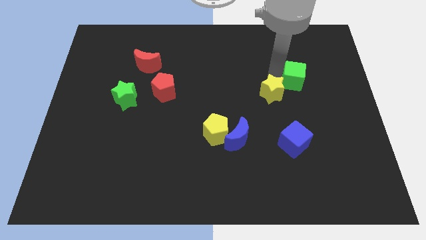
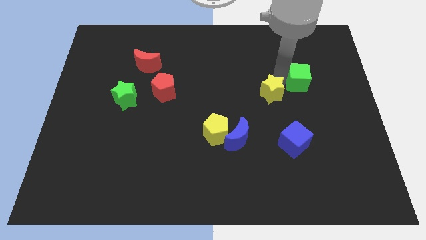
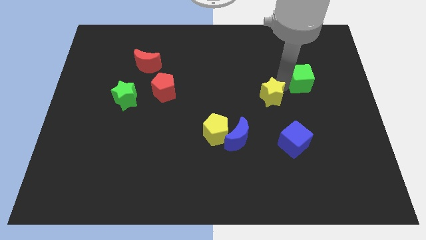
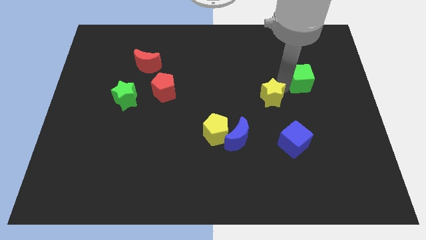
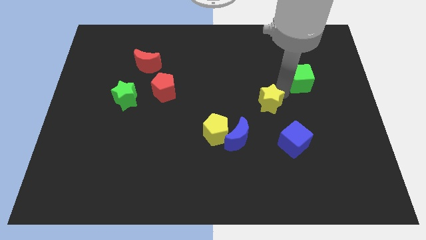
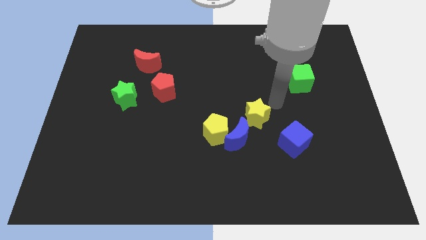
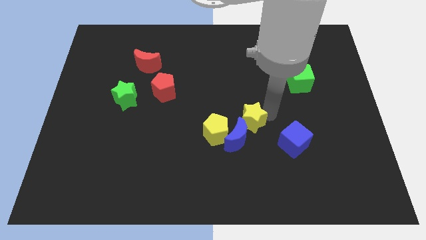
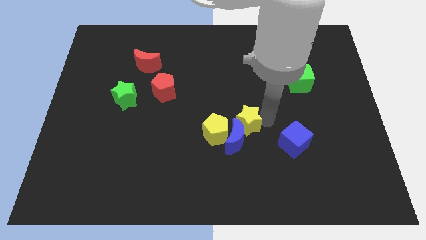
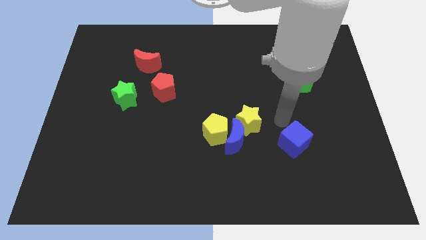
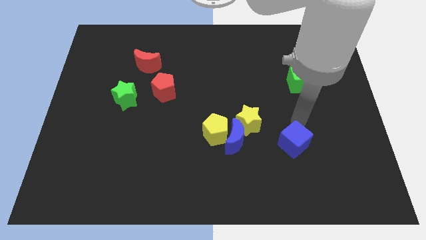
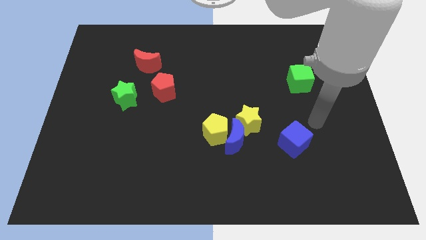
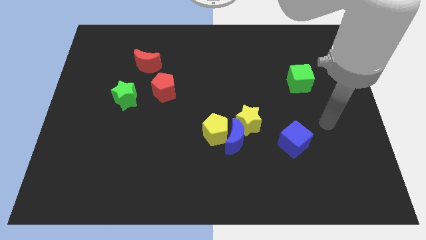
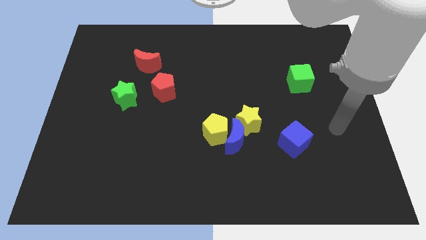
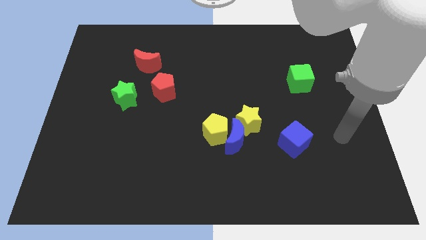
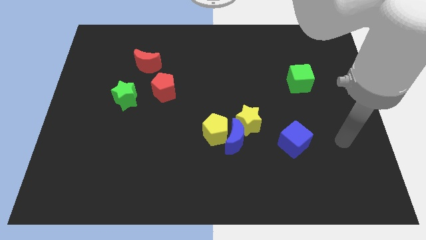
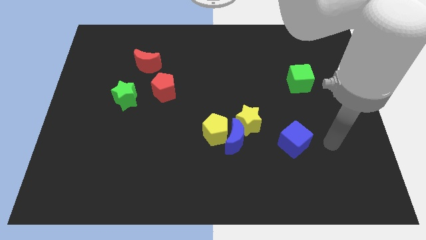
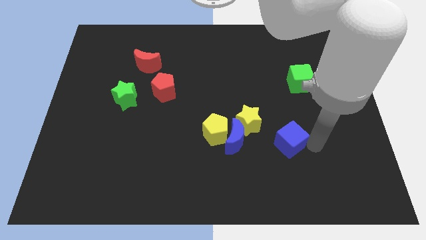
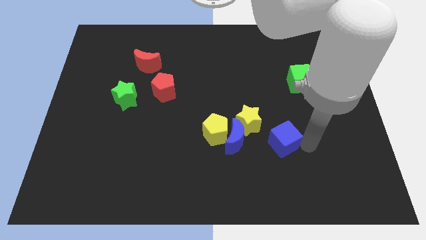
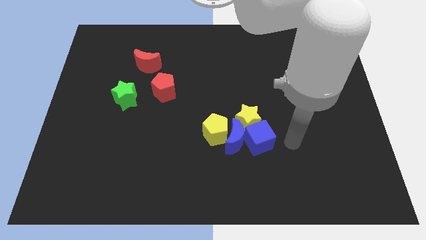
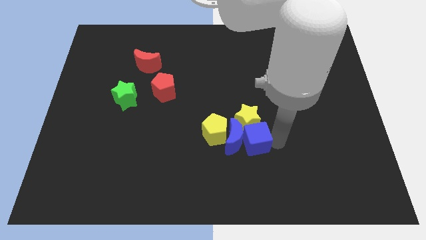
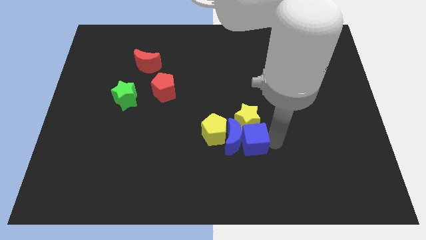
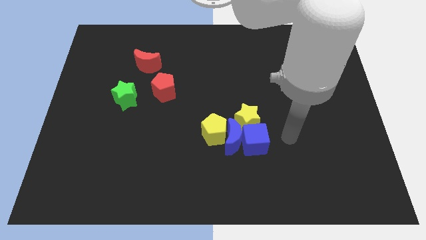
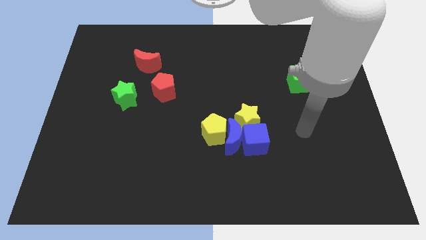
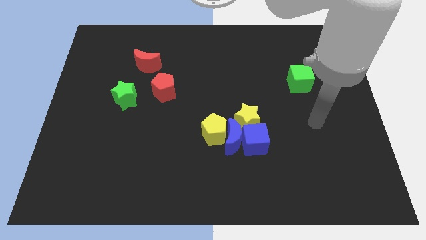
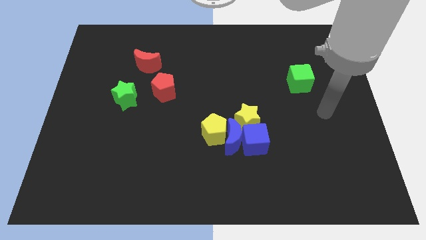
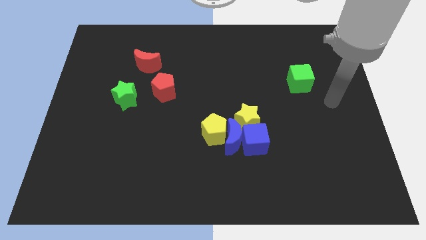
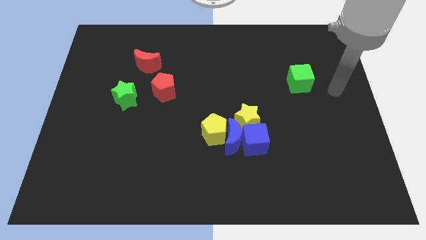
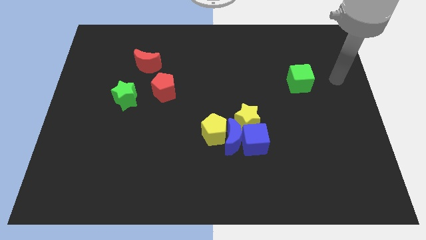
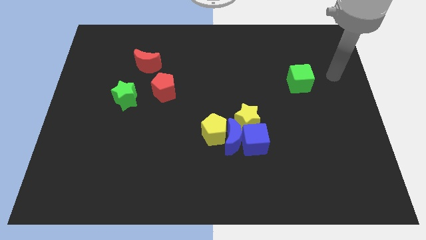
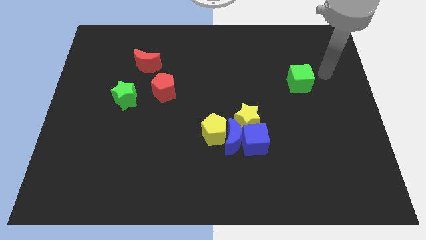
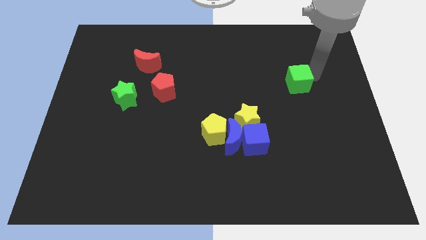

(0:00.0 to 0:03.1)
make a group of blocks with the yellow and blue blocks

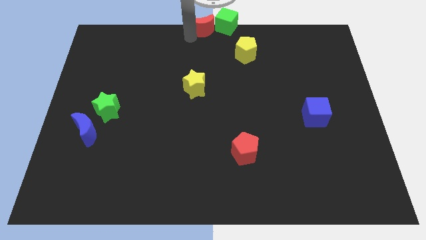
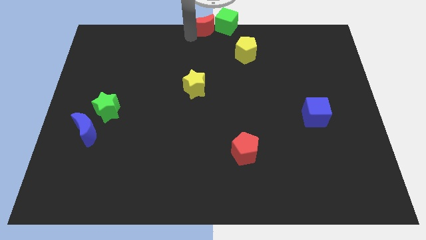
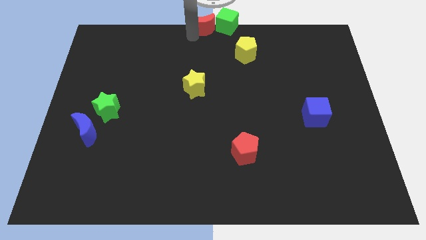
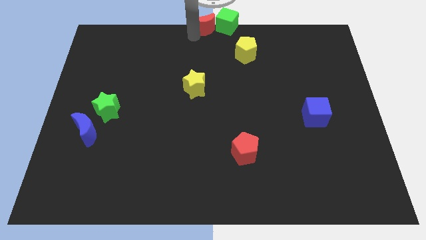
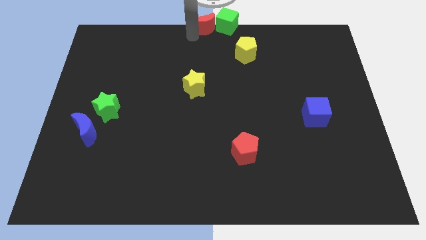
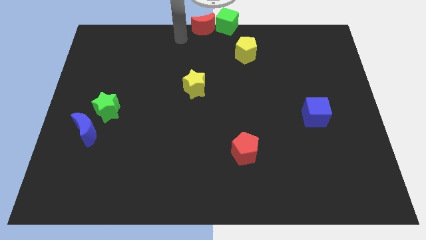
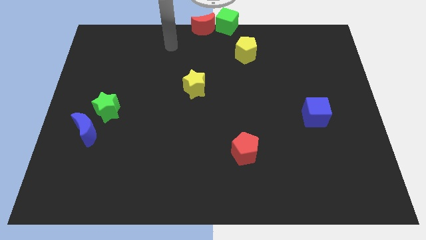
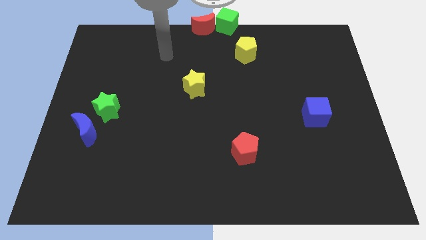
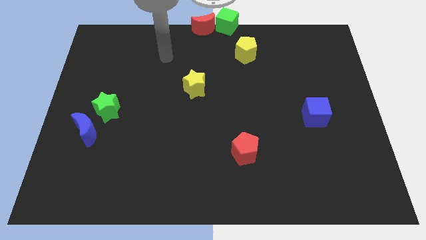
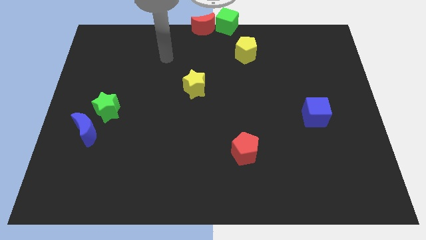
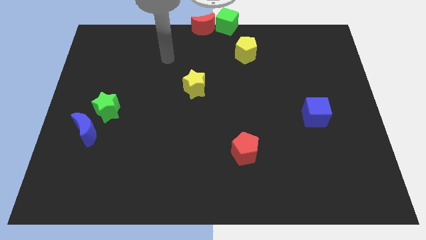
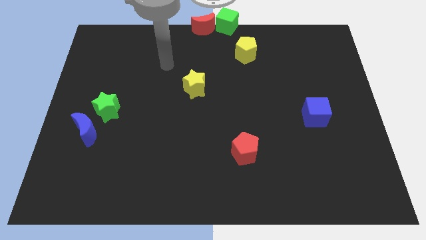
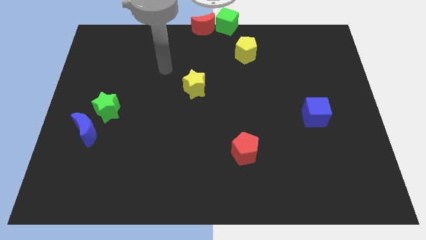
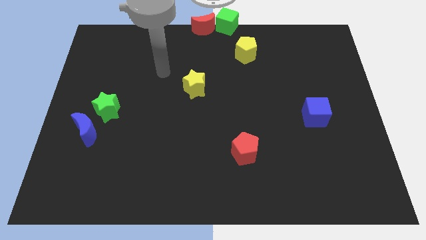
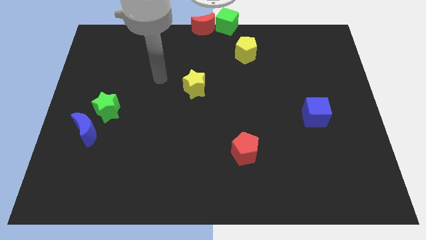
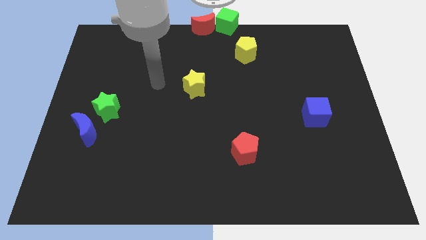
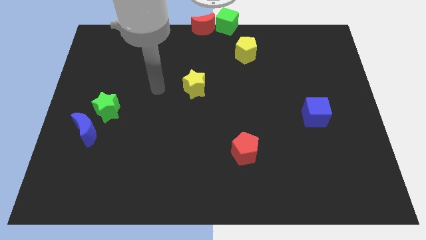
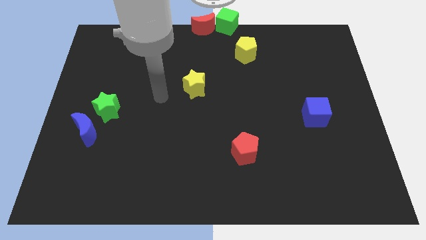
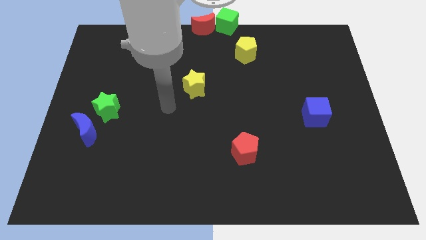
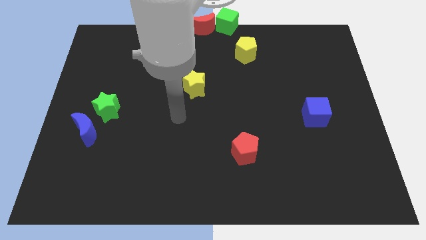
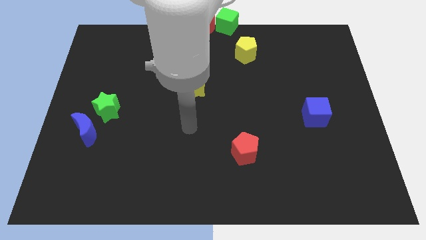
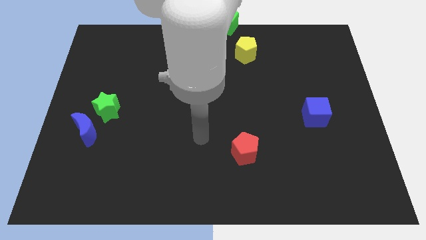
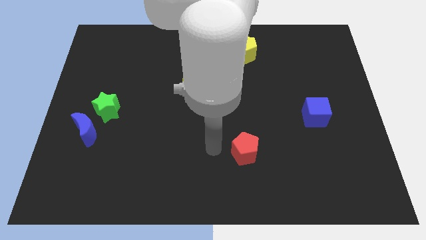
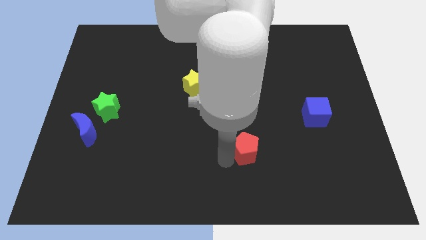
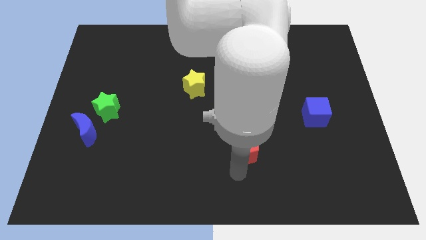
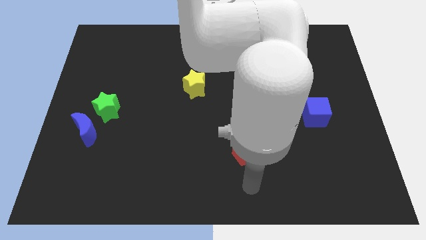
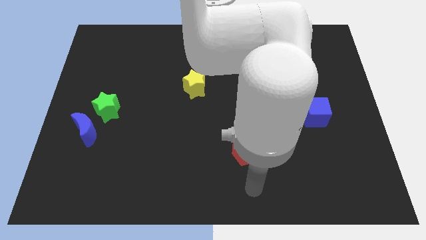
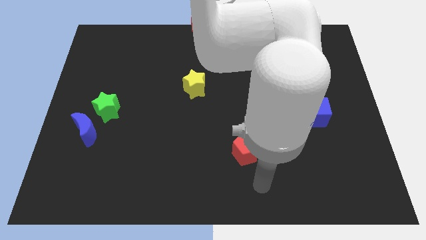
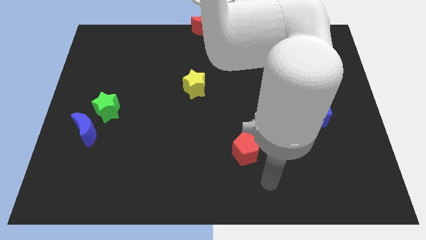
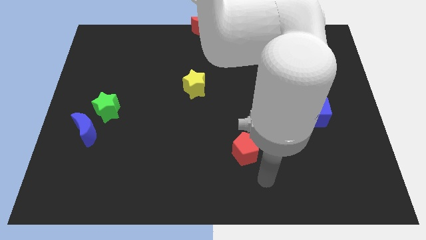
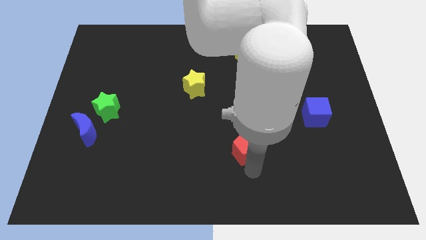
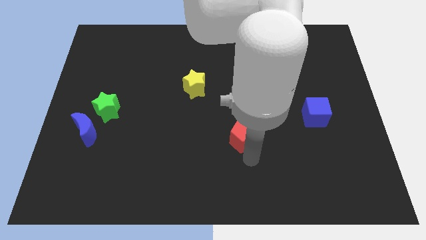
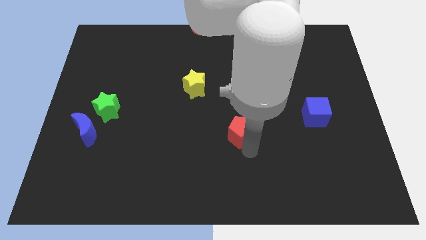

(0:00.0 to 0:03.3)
move your arm away from the red crescent

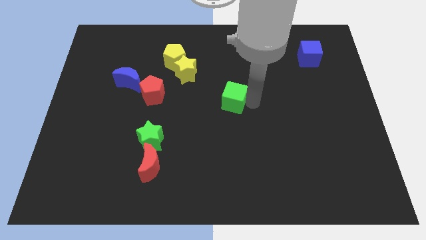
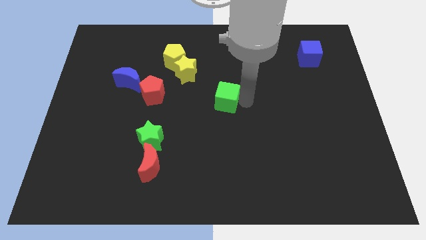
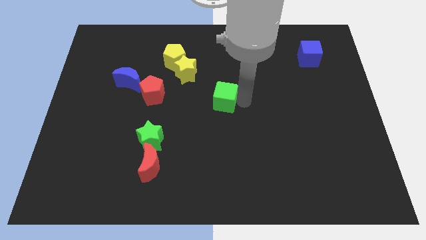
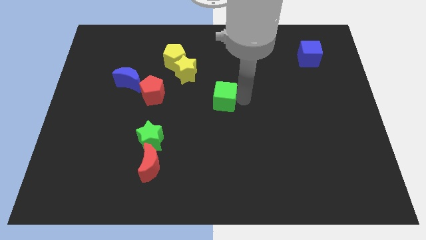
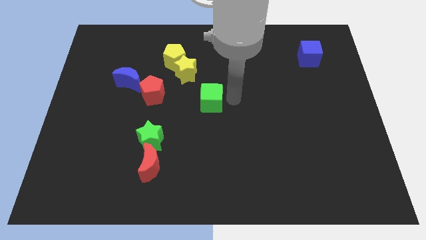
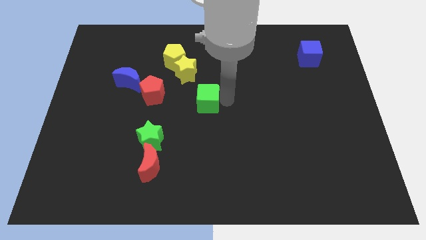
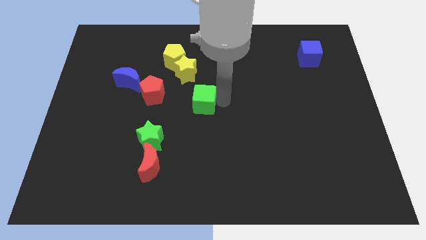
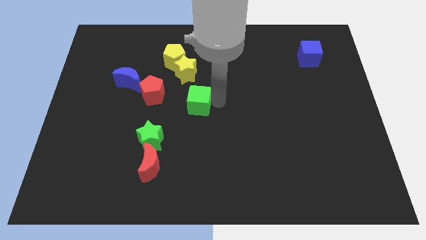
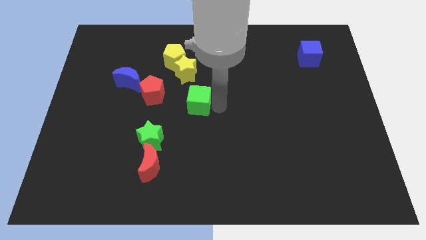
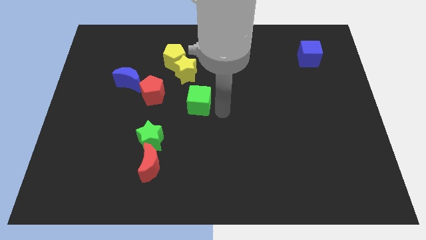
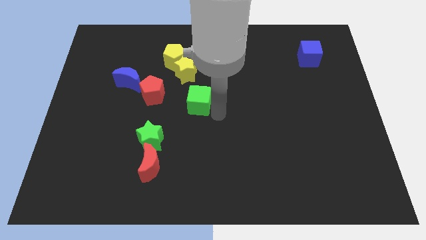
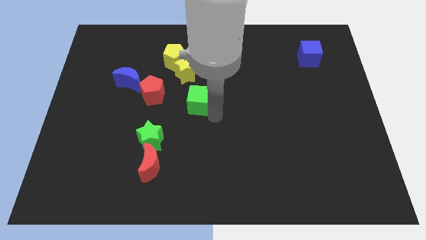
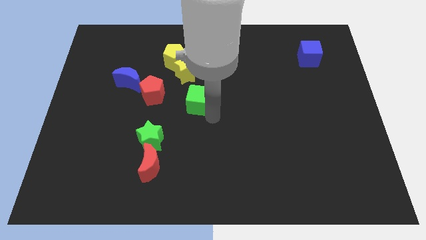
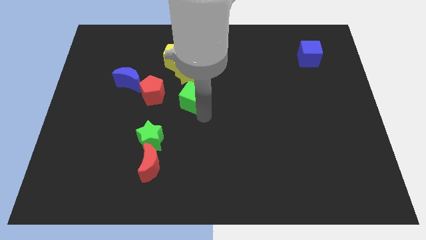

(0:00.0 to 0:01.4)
push the green cube towards the left side of the board

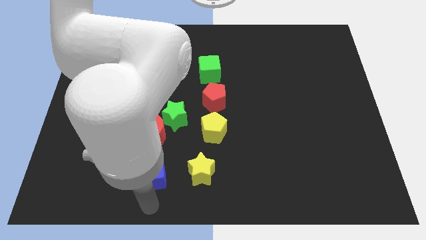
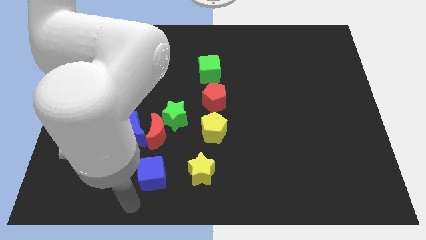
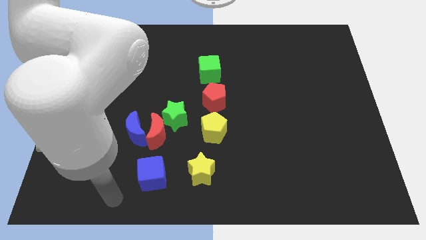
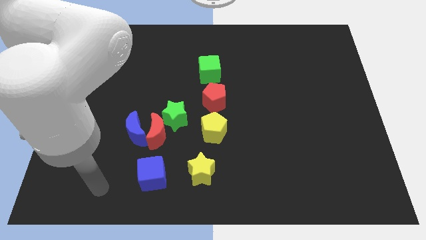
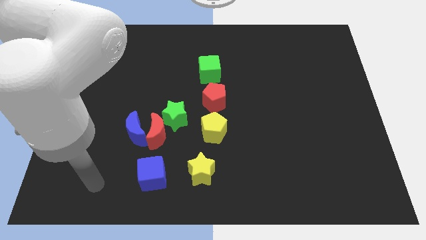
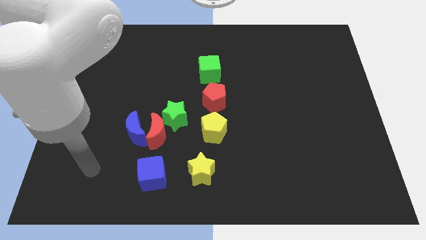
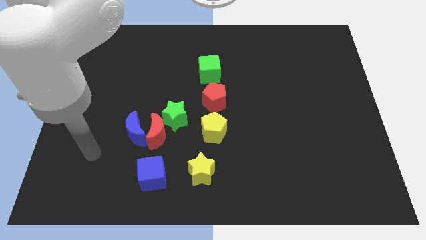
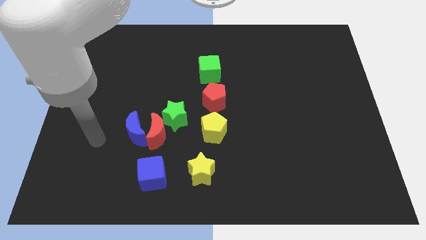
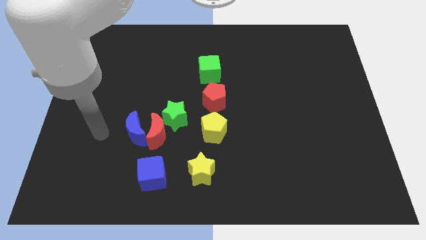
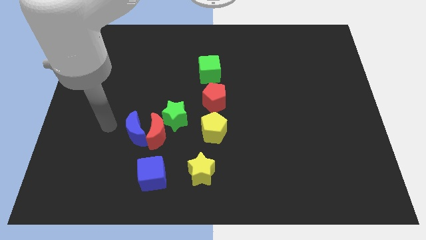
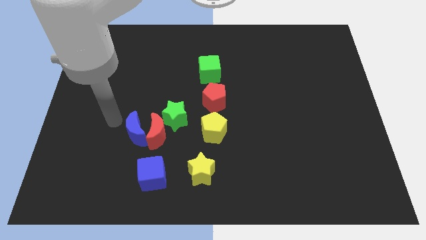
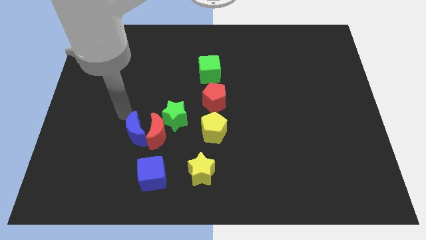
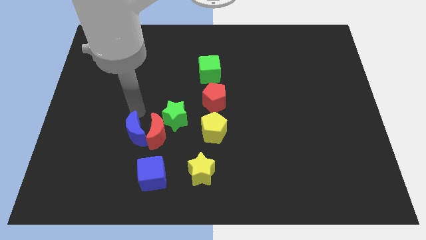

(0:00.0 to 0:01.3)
move your arm to the top of the blue crescent
